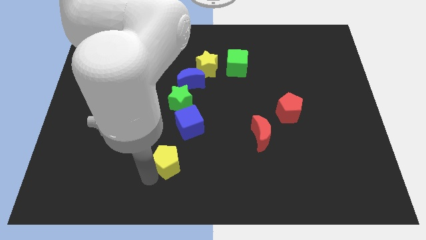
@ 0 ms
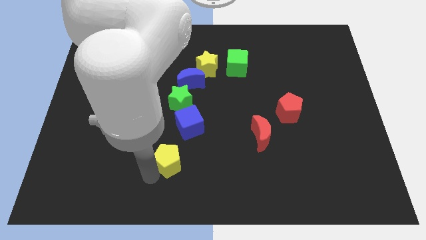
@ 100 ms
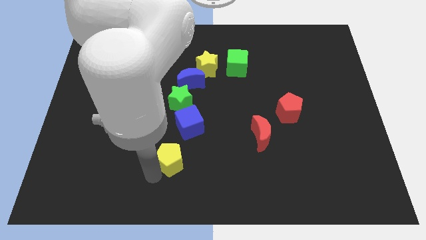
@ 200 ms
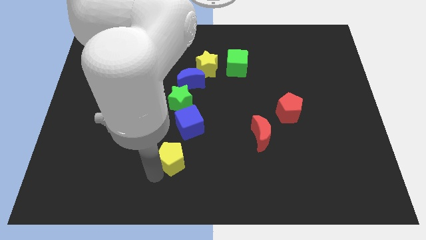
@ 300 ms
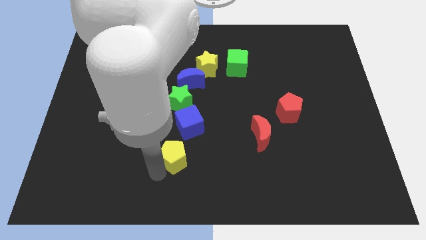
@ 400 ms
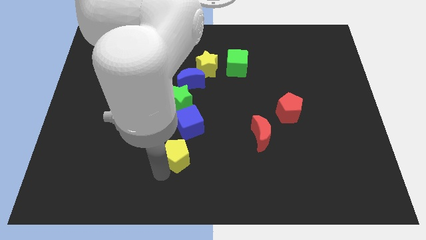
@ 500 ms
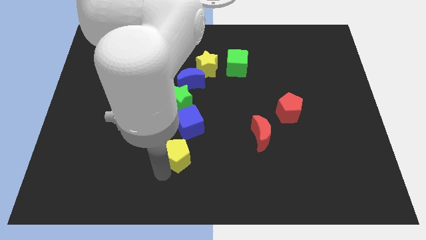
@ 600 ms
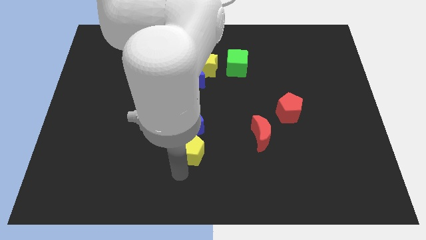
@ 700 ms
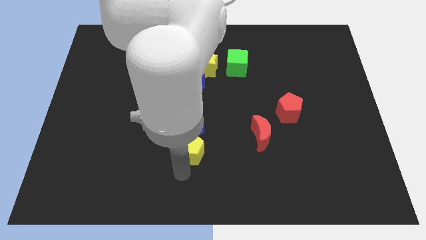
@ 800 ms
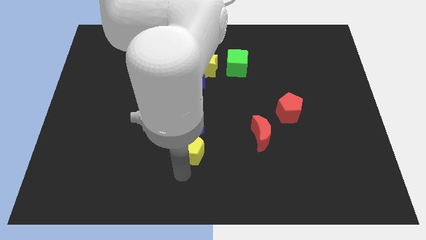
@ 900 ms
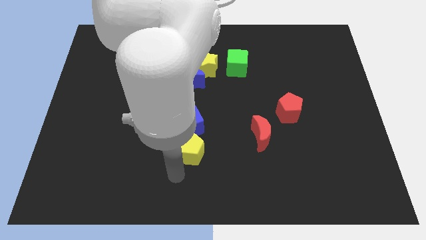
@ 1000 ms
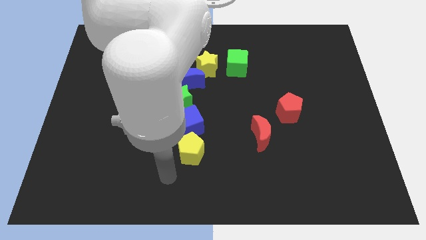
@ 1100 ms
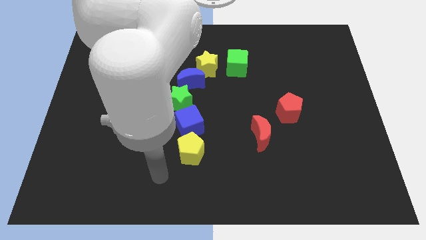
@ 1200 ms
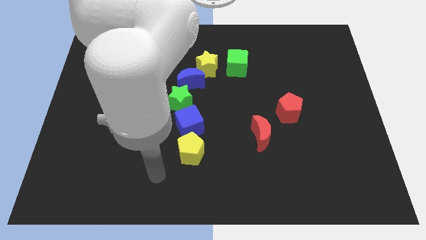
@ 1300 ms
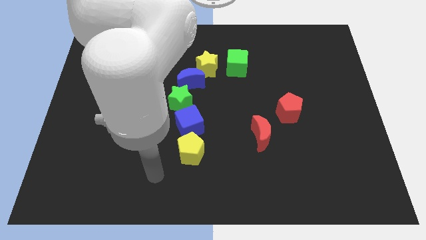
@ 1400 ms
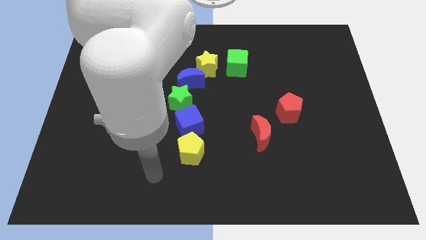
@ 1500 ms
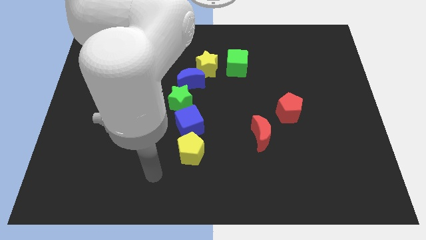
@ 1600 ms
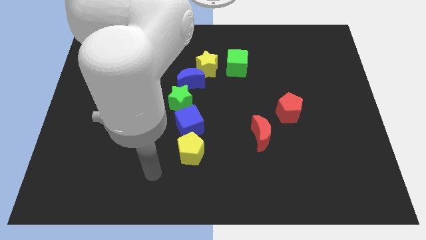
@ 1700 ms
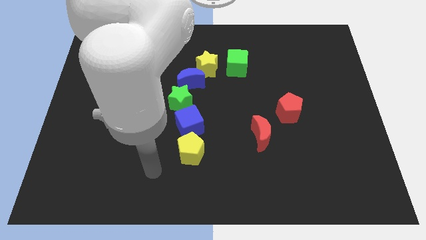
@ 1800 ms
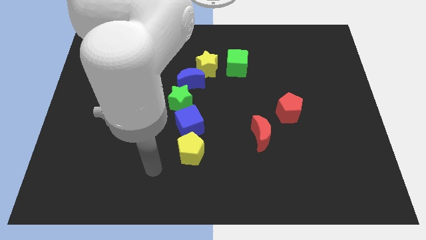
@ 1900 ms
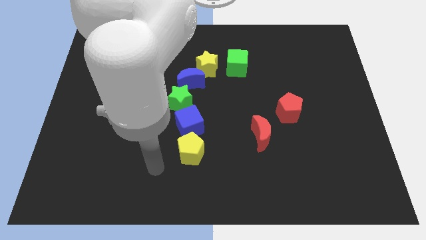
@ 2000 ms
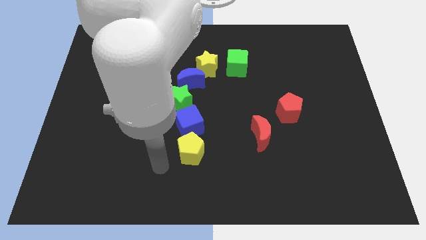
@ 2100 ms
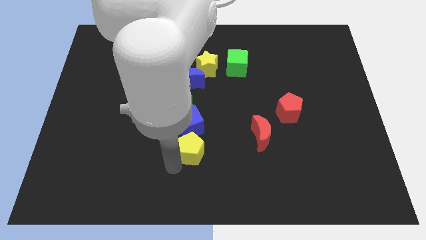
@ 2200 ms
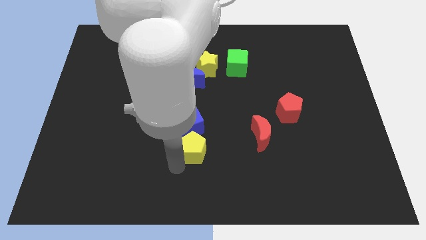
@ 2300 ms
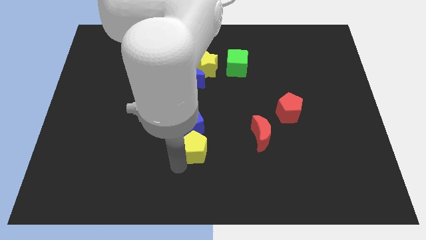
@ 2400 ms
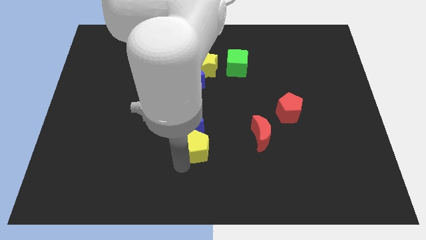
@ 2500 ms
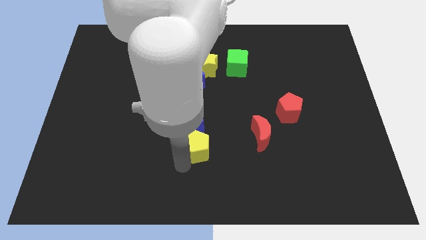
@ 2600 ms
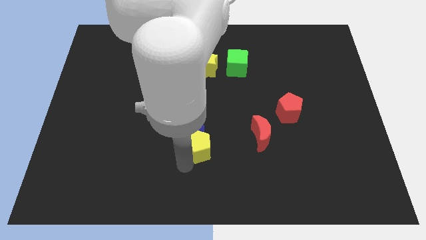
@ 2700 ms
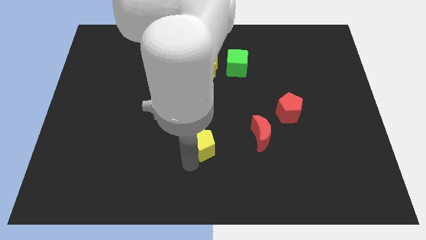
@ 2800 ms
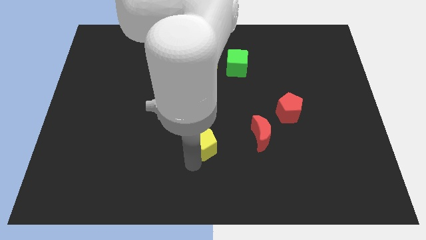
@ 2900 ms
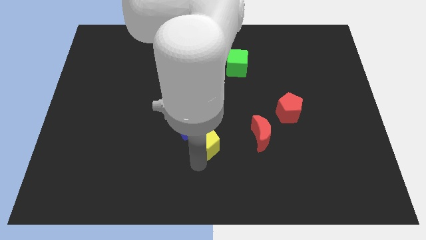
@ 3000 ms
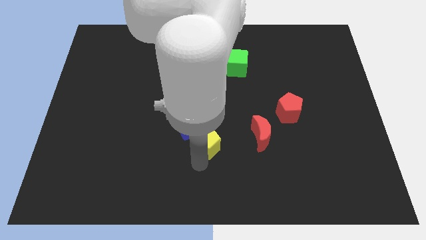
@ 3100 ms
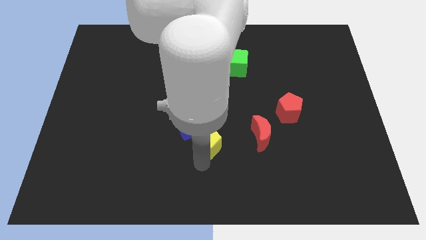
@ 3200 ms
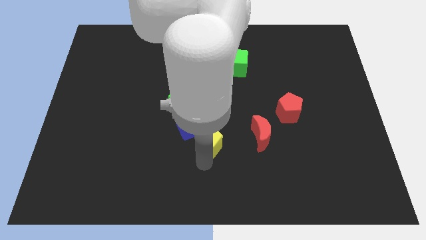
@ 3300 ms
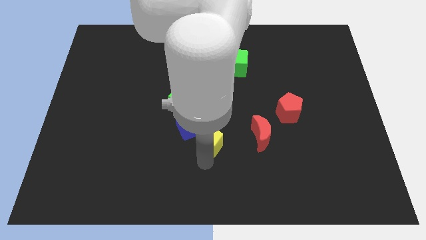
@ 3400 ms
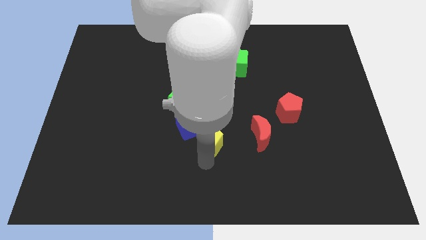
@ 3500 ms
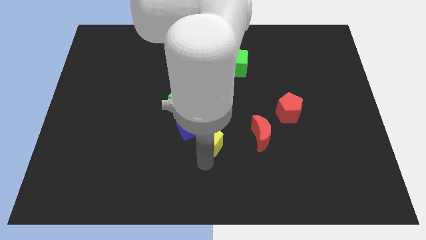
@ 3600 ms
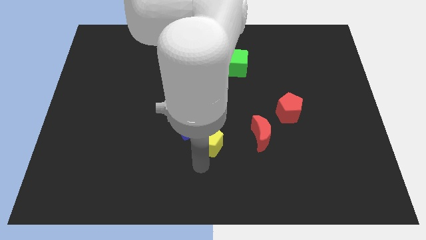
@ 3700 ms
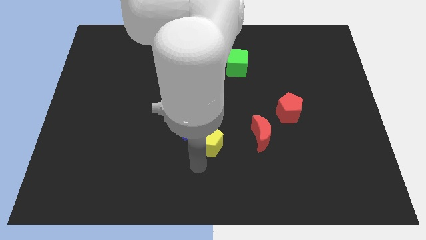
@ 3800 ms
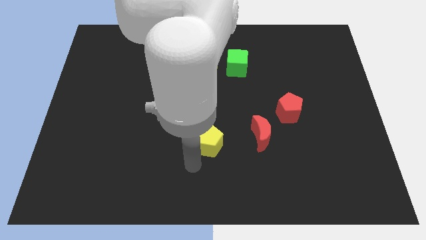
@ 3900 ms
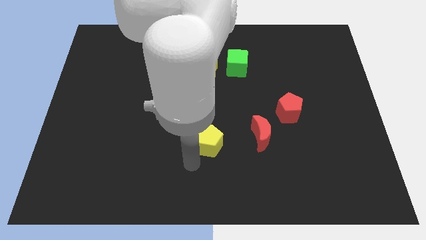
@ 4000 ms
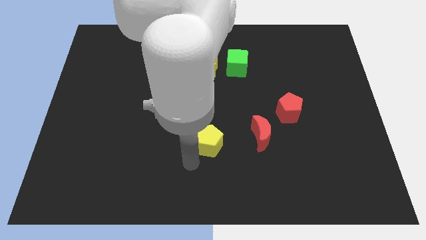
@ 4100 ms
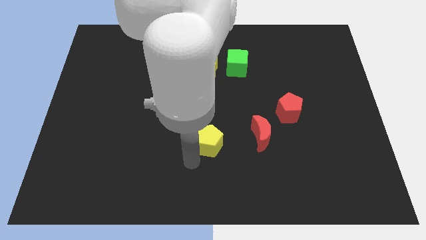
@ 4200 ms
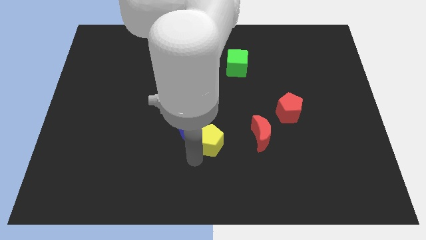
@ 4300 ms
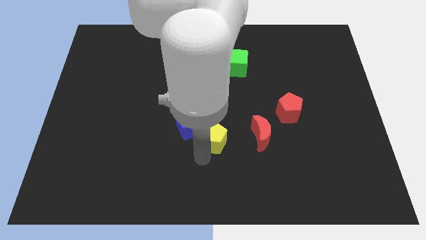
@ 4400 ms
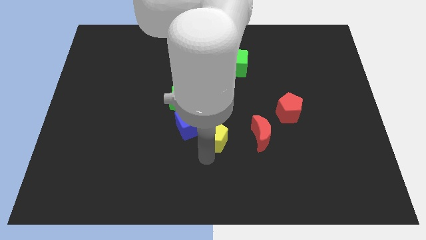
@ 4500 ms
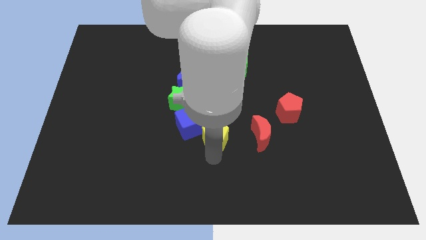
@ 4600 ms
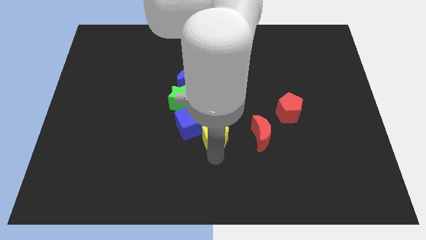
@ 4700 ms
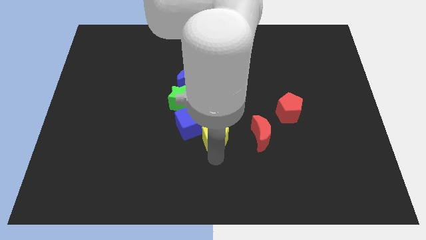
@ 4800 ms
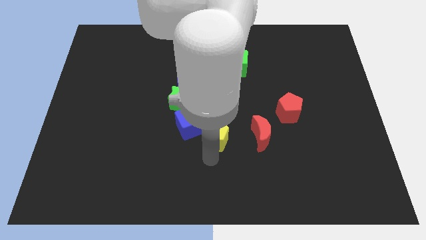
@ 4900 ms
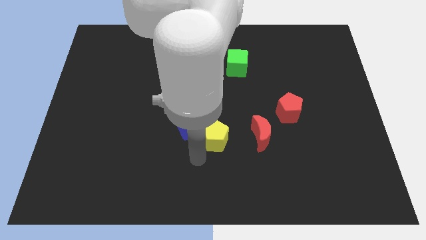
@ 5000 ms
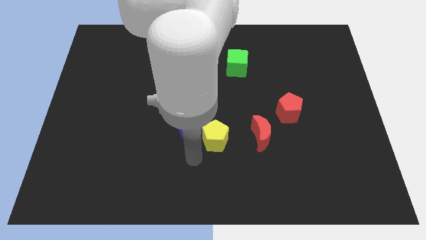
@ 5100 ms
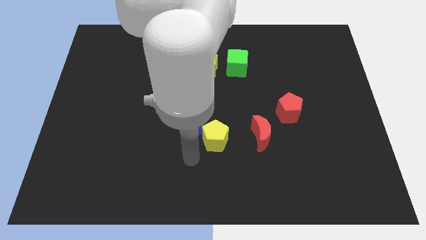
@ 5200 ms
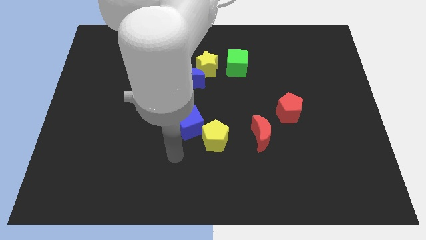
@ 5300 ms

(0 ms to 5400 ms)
push the yellow pentagon to the bottom right of the blue cube

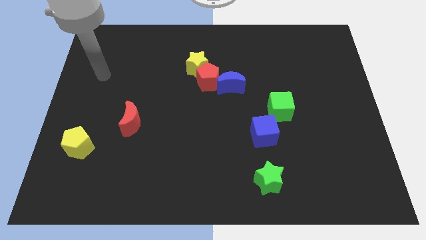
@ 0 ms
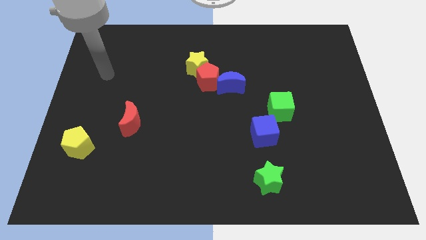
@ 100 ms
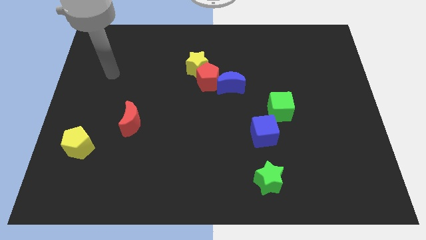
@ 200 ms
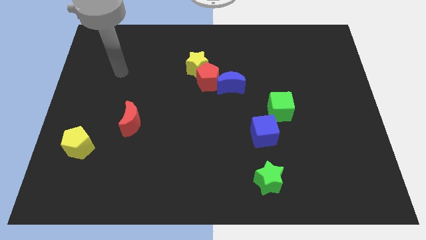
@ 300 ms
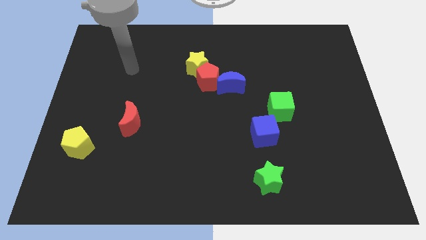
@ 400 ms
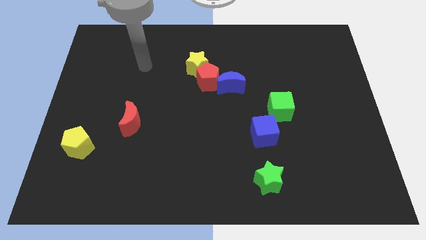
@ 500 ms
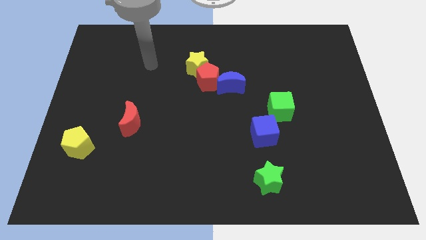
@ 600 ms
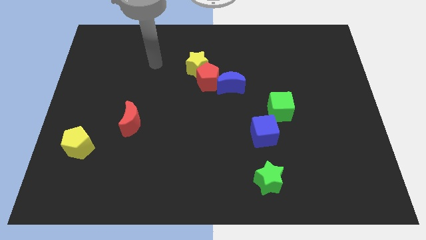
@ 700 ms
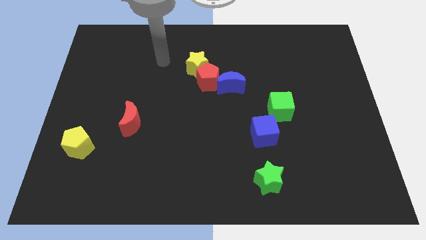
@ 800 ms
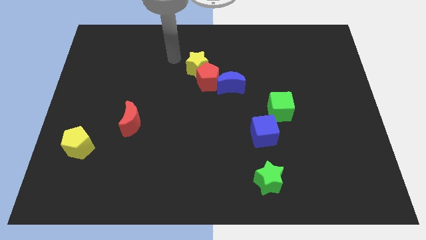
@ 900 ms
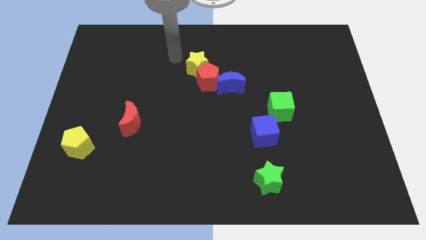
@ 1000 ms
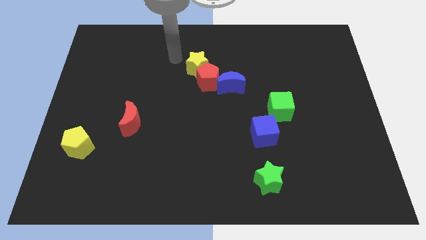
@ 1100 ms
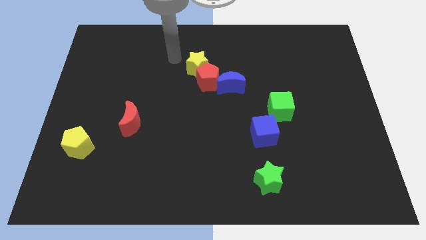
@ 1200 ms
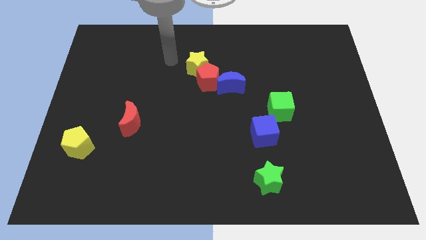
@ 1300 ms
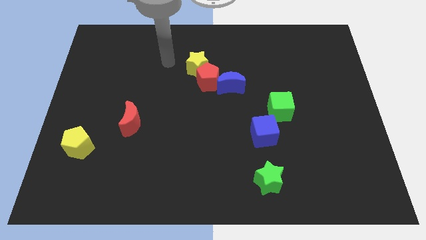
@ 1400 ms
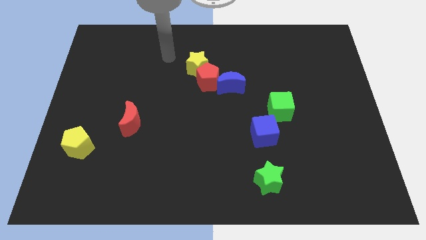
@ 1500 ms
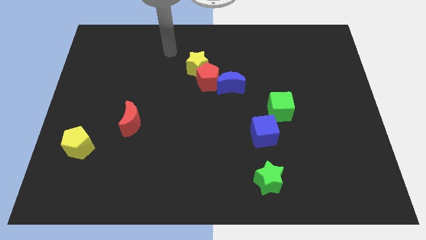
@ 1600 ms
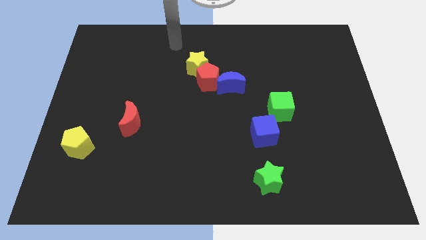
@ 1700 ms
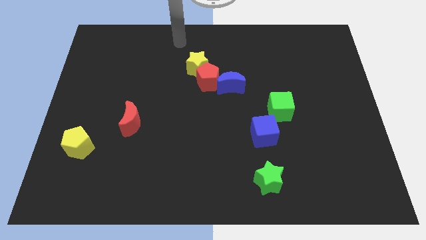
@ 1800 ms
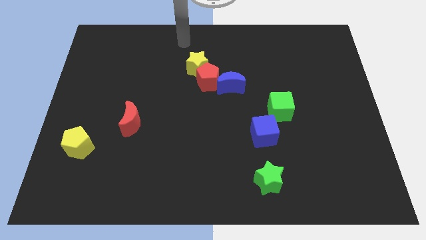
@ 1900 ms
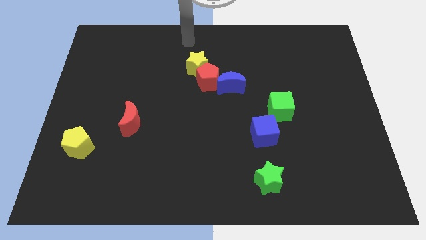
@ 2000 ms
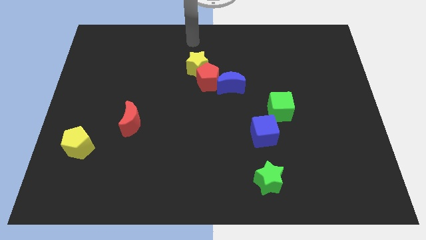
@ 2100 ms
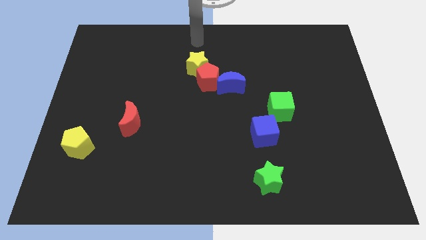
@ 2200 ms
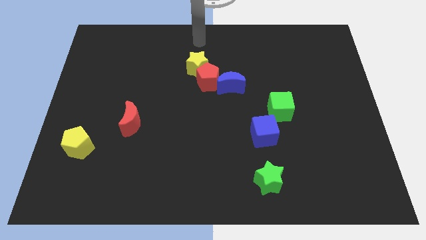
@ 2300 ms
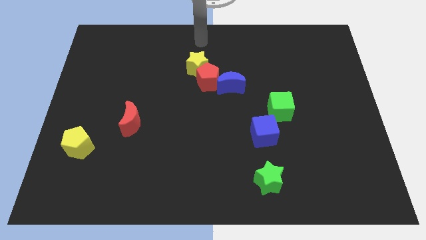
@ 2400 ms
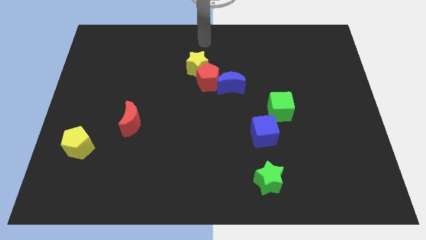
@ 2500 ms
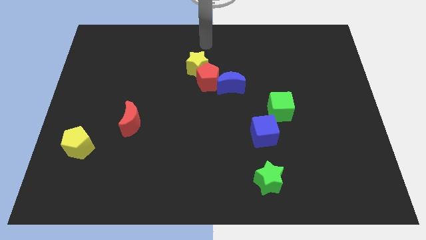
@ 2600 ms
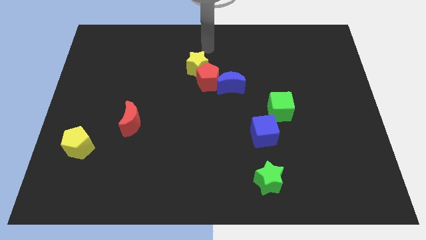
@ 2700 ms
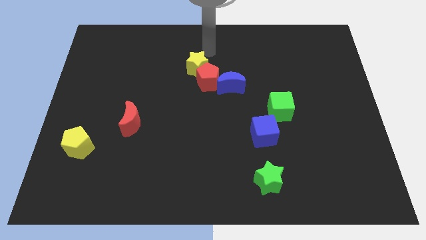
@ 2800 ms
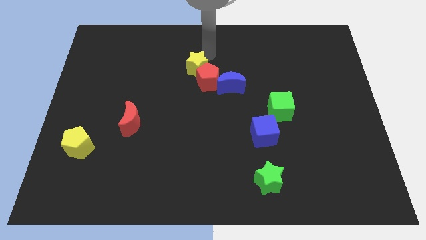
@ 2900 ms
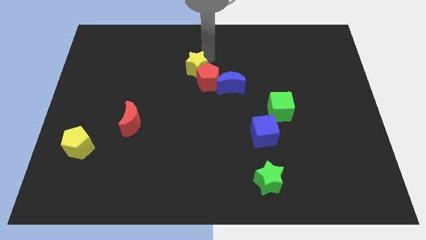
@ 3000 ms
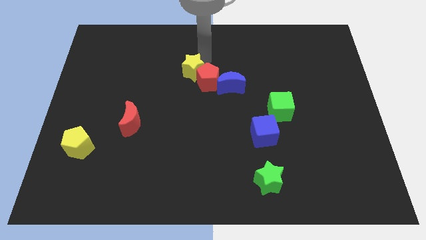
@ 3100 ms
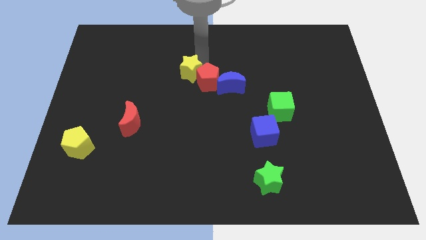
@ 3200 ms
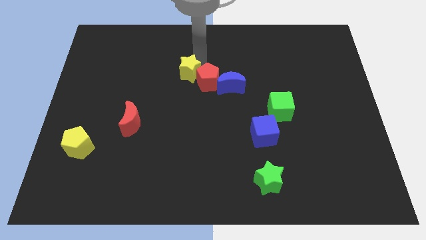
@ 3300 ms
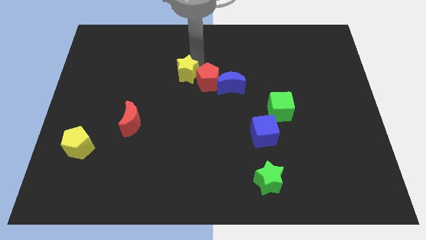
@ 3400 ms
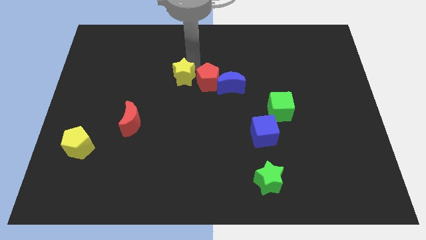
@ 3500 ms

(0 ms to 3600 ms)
push the yellow star slightly to the bottom side of the board
